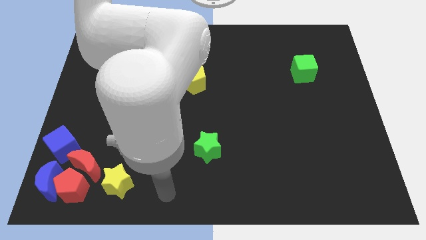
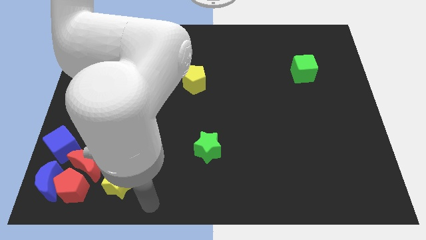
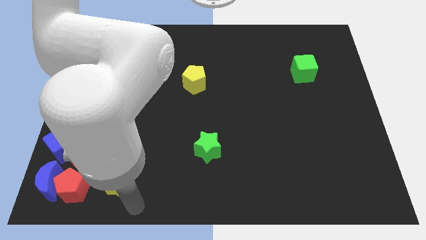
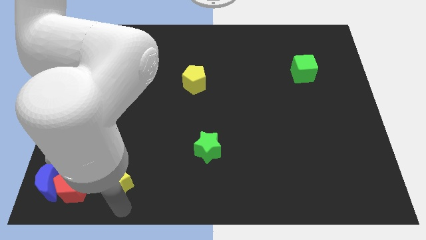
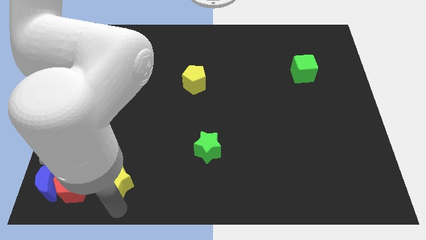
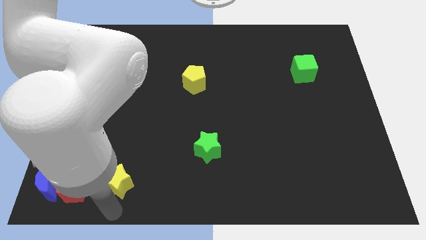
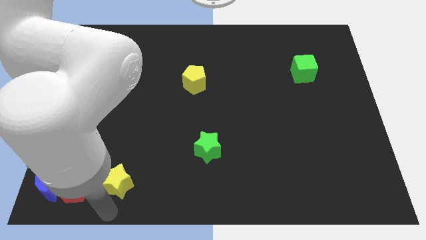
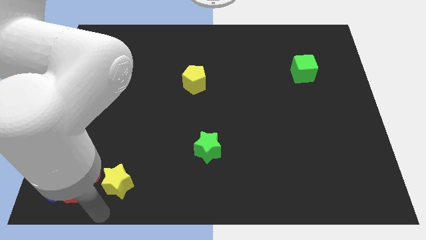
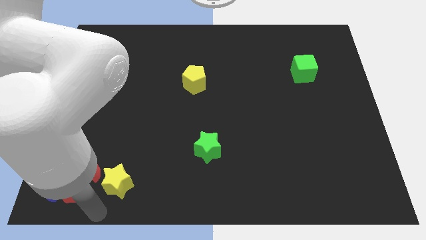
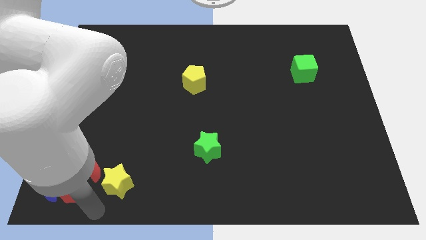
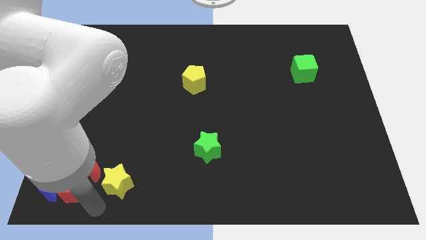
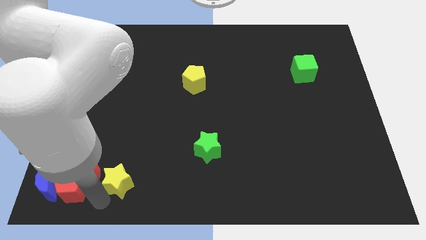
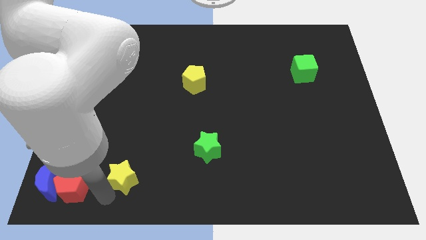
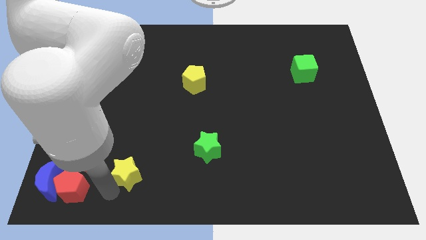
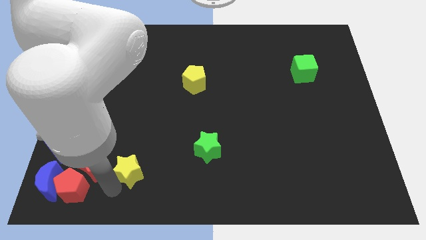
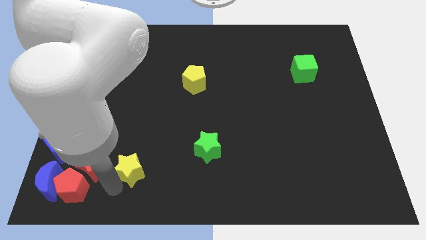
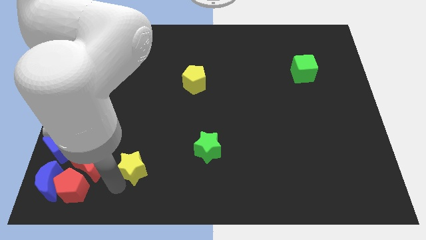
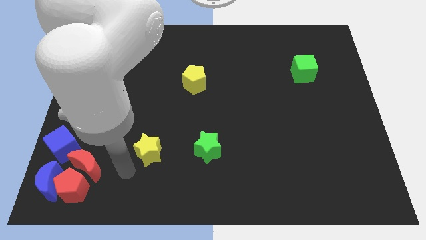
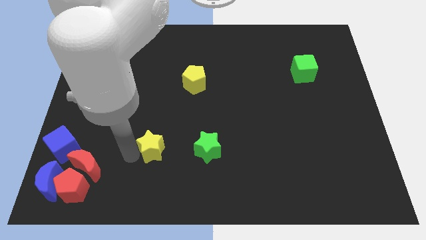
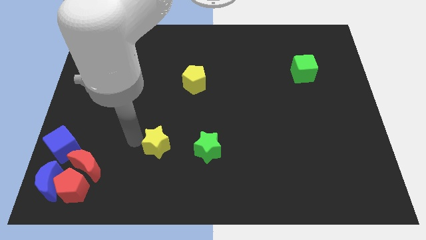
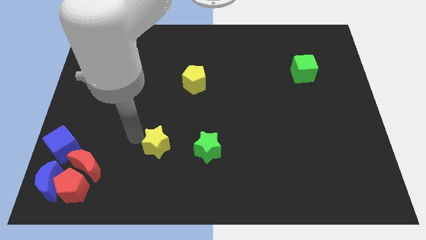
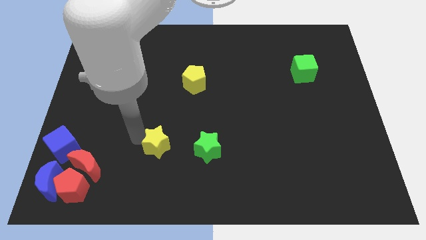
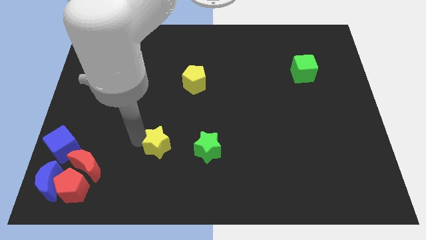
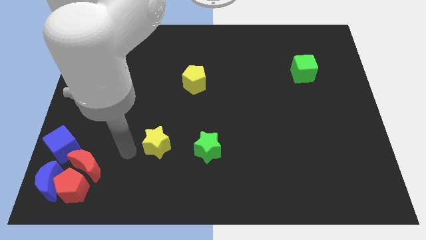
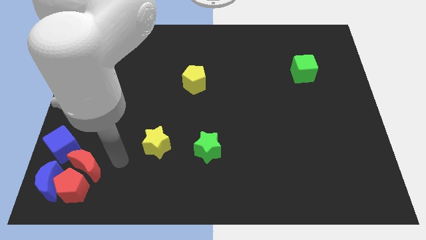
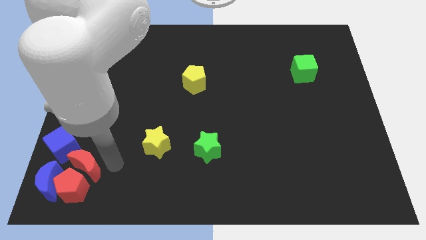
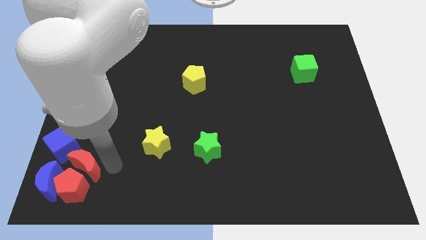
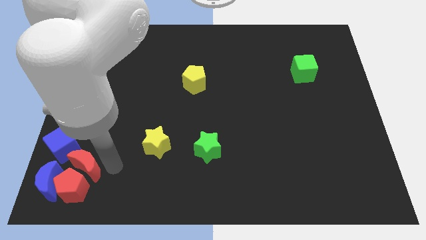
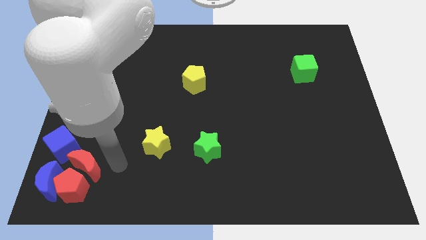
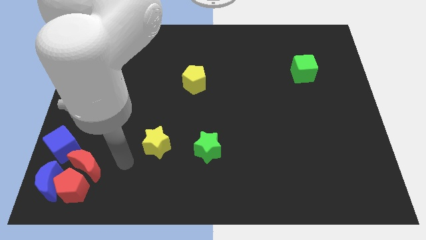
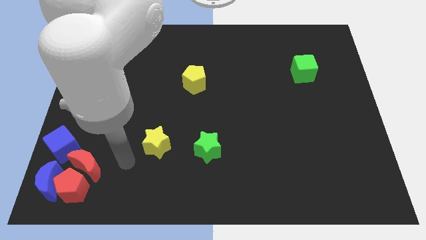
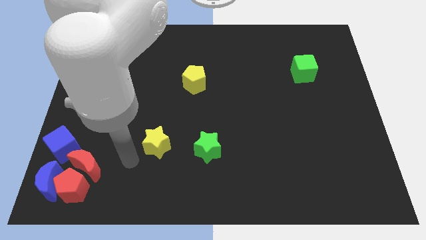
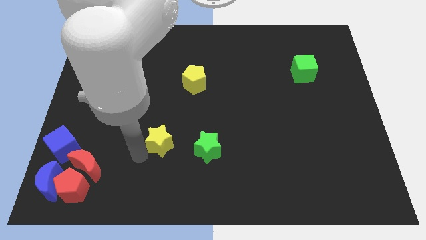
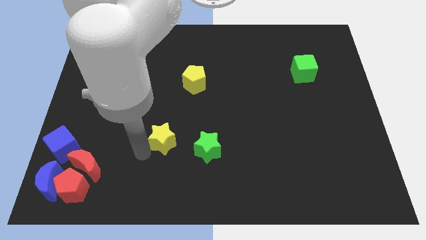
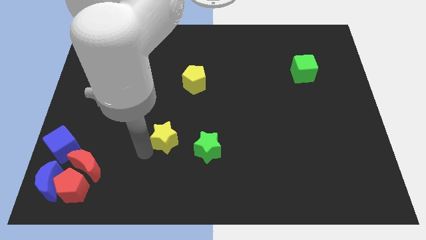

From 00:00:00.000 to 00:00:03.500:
separate yellow star from red blocks

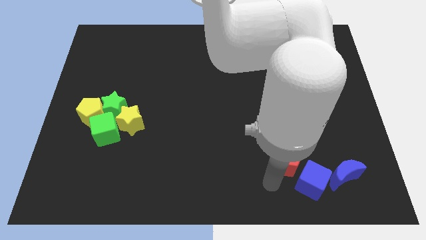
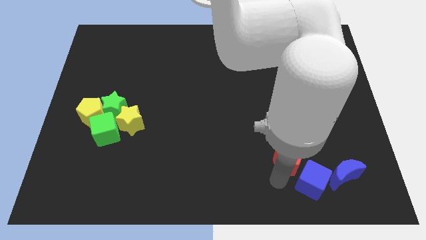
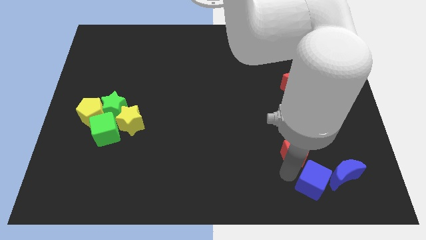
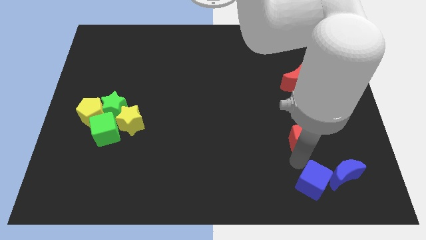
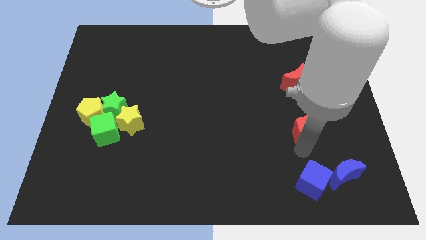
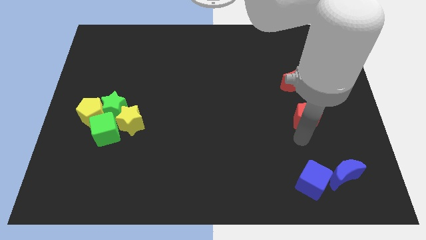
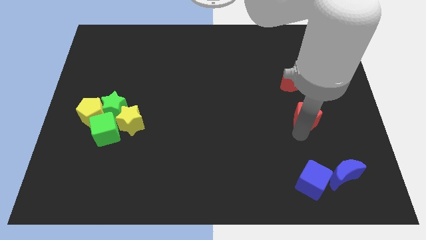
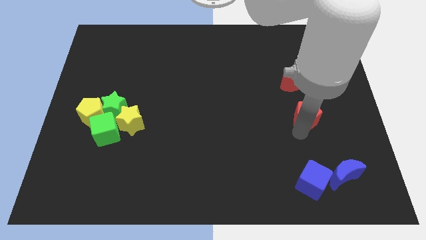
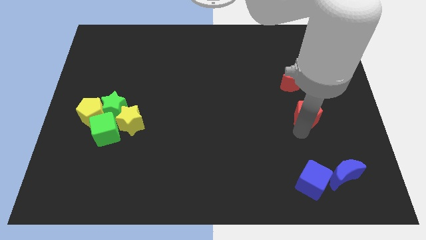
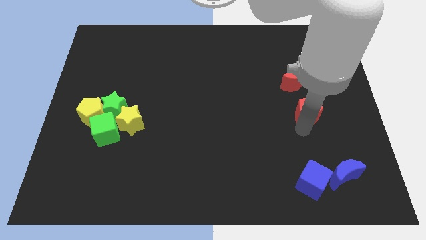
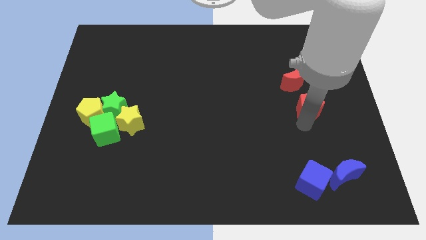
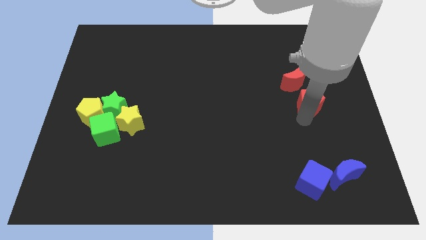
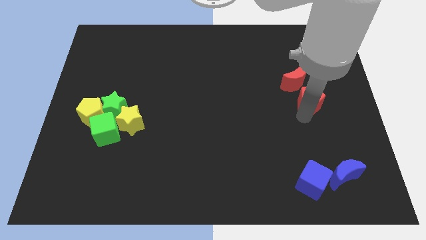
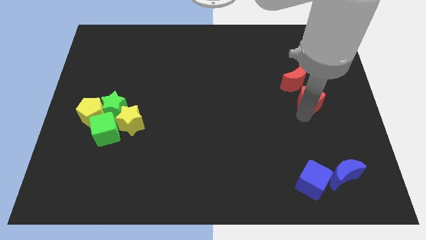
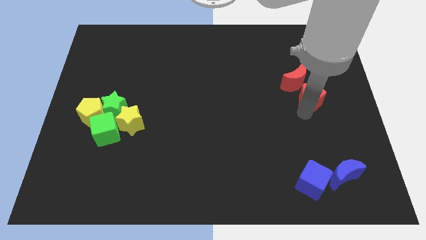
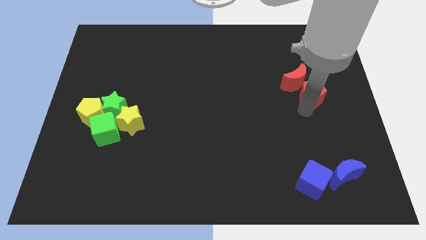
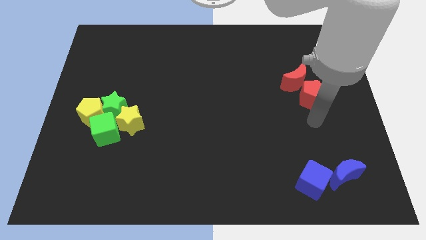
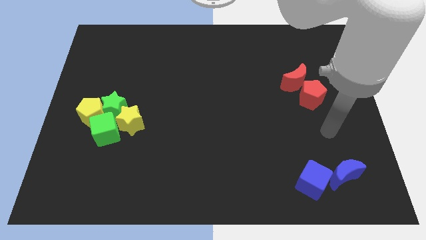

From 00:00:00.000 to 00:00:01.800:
push the red penatgon into red moon at the bottom

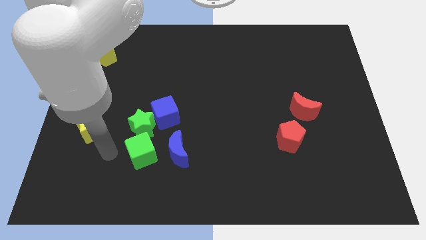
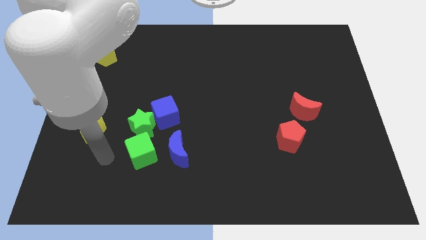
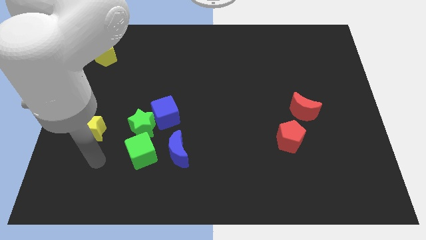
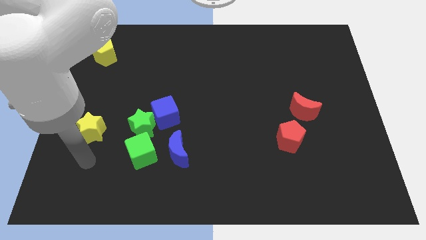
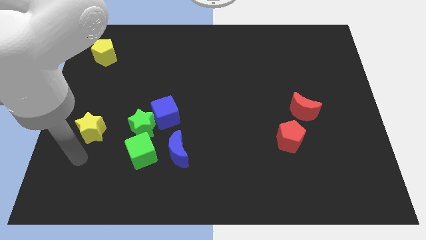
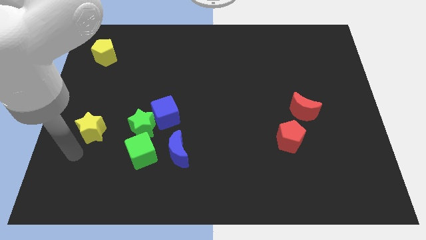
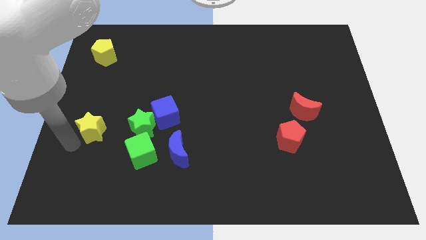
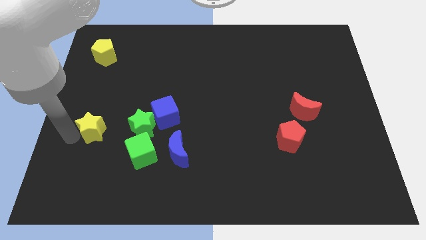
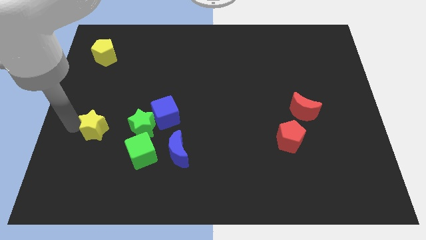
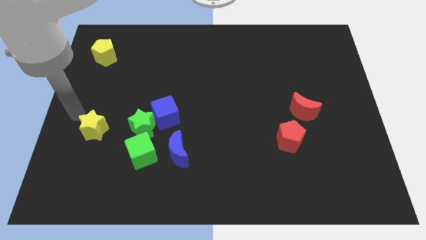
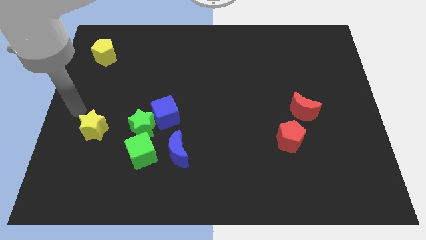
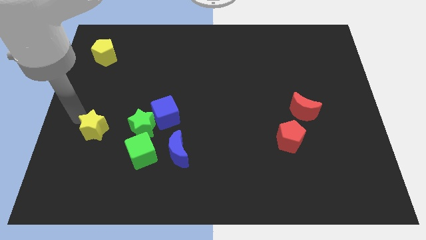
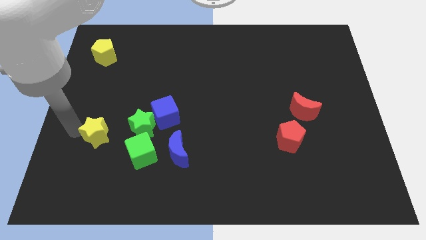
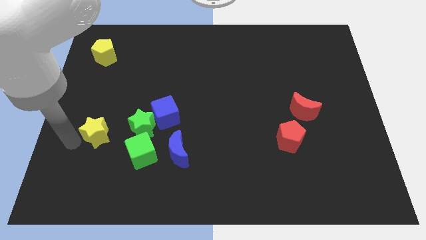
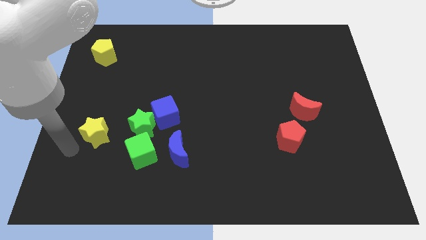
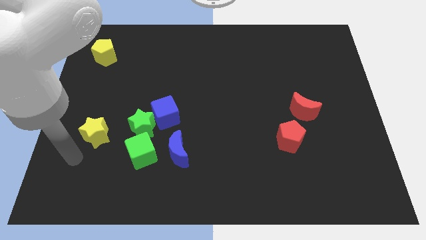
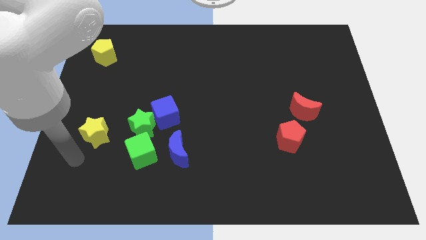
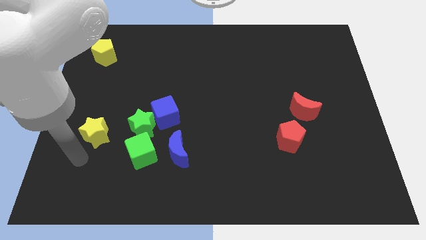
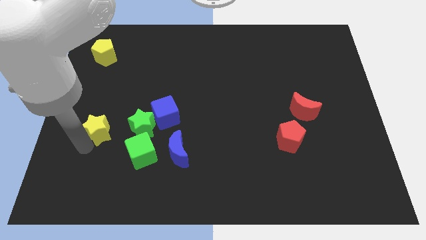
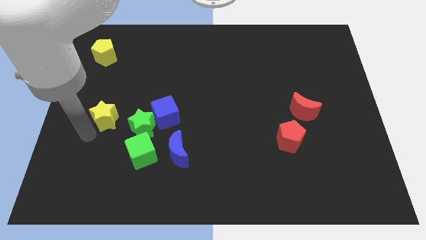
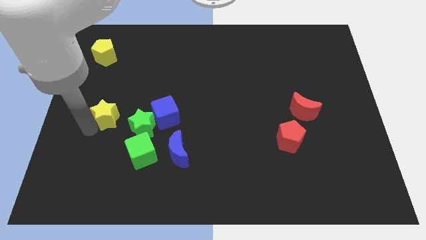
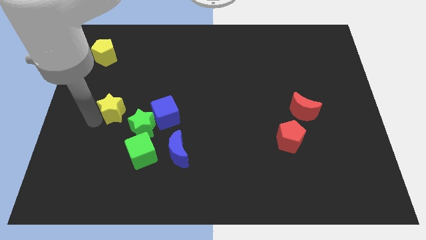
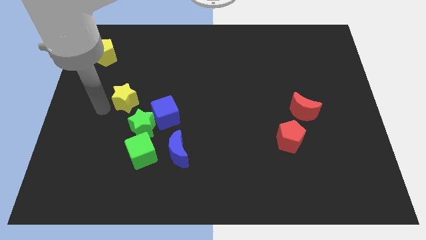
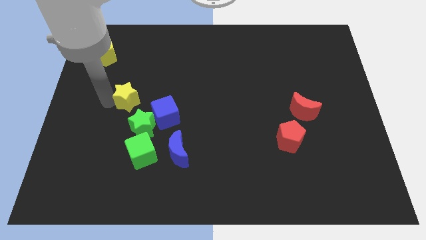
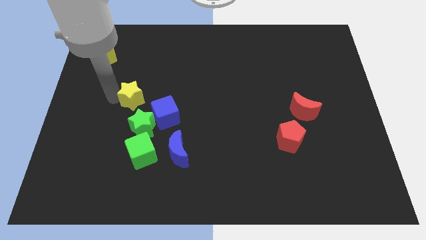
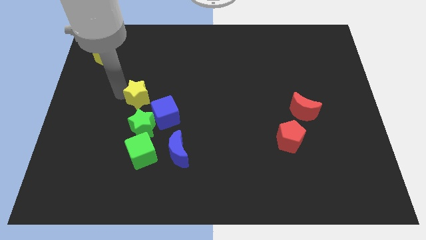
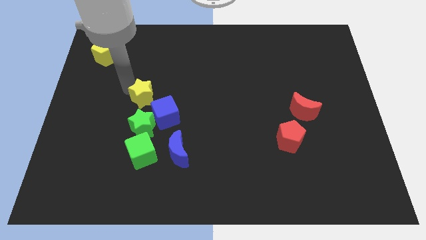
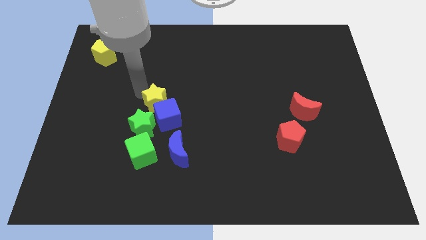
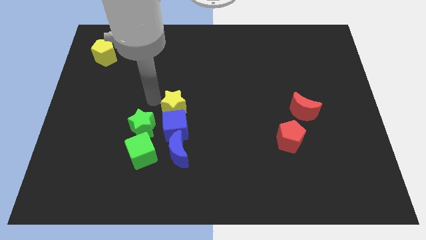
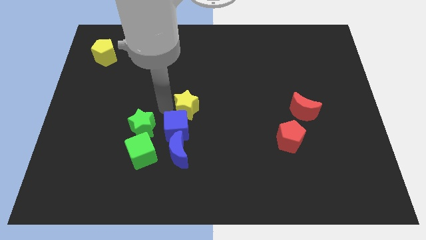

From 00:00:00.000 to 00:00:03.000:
push the yellow star into blue cube

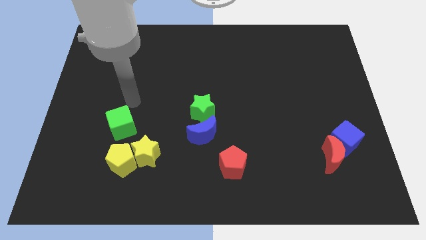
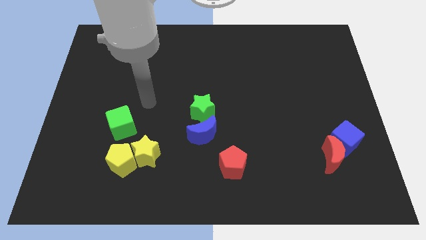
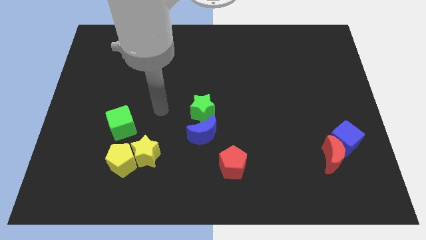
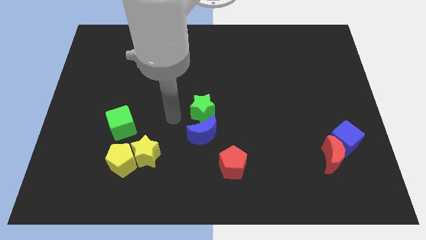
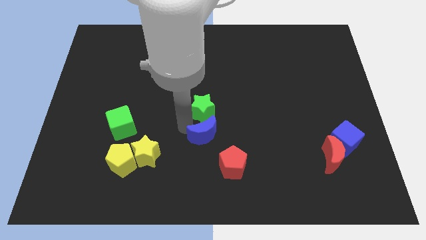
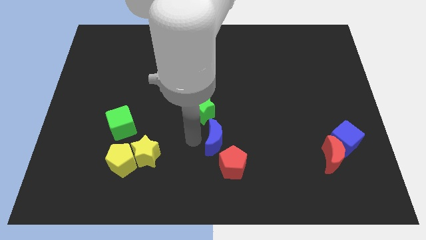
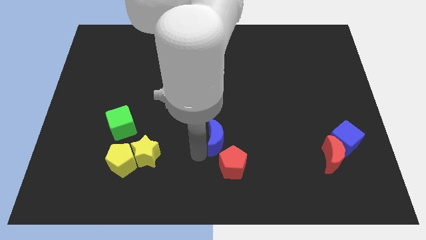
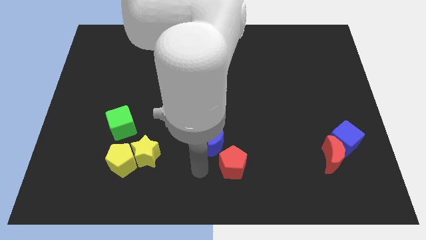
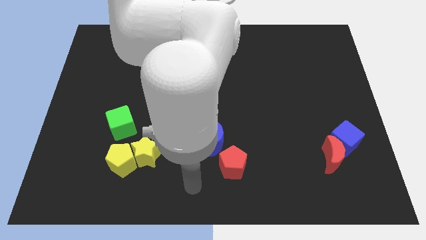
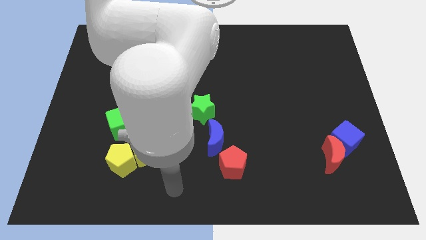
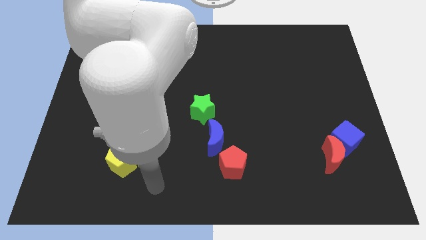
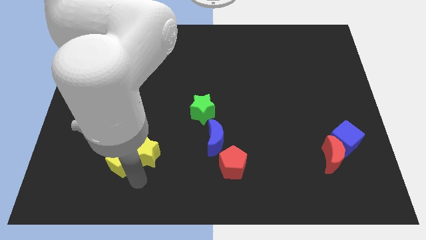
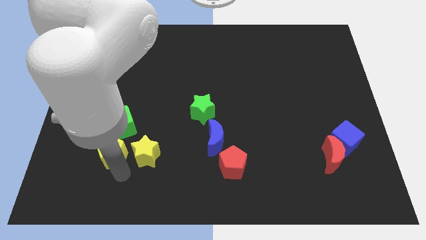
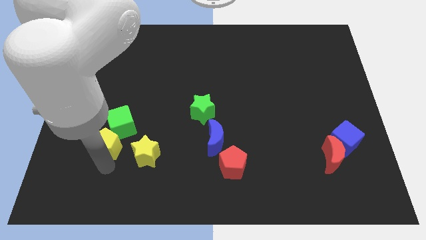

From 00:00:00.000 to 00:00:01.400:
move yellow pentagon slightly up
